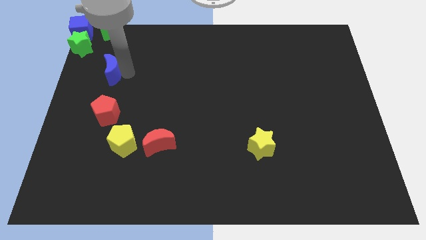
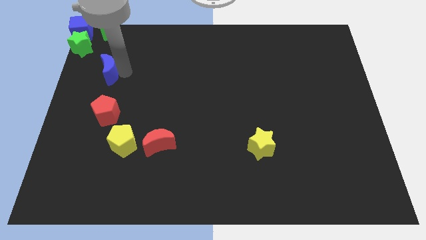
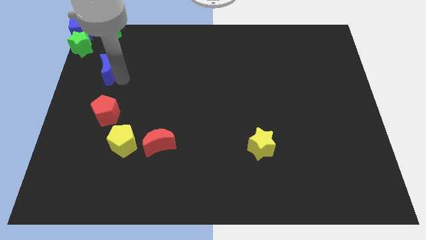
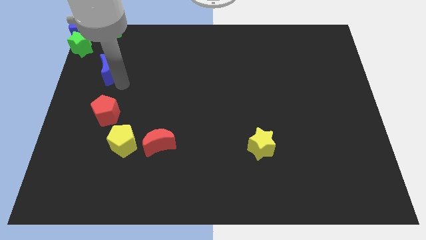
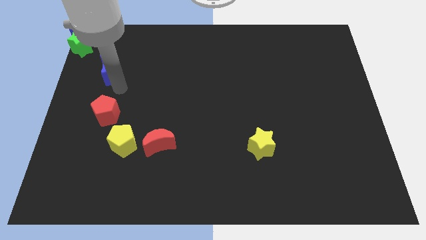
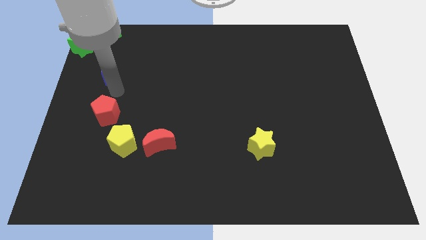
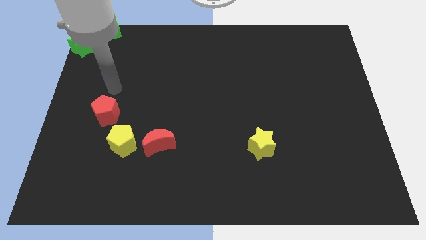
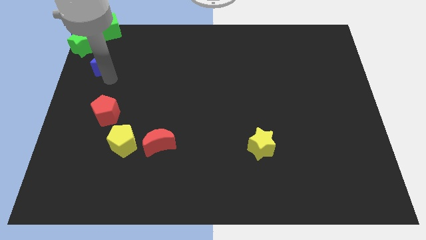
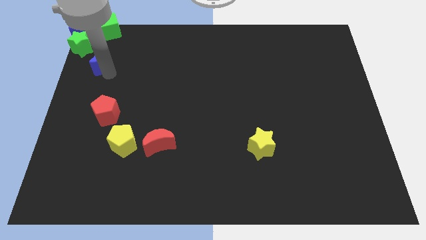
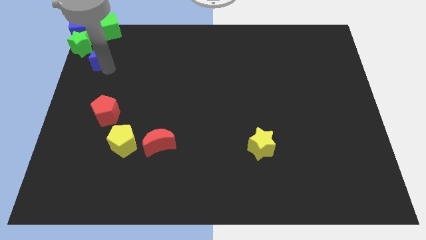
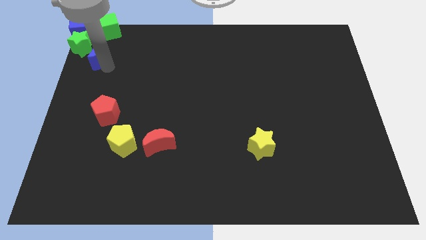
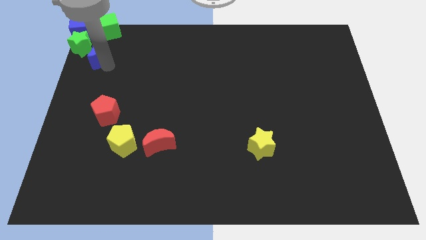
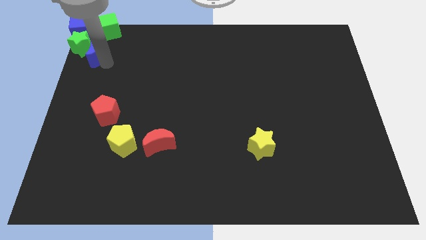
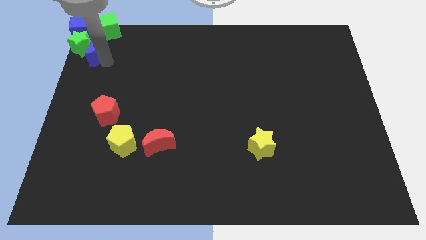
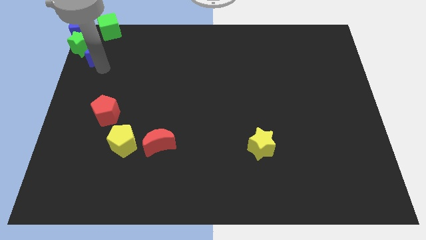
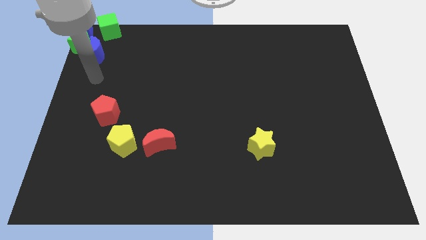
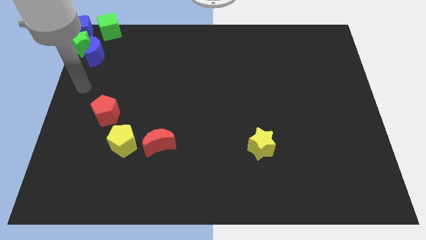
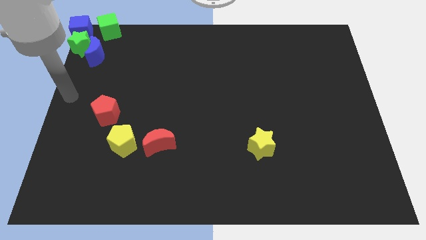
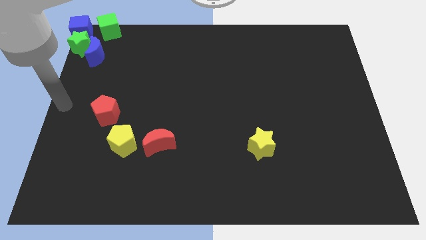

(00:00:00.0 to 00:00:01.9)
move the blue moon close to the green star

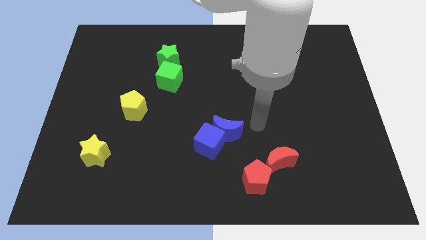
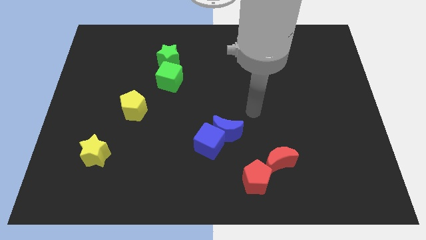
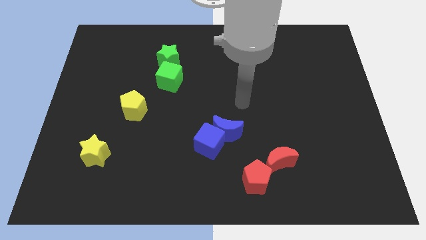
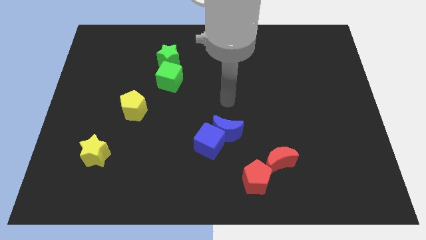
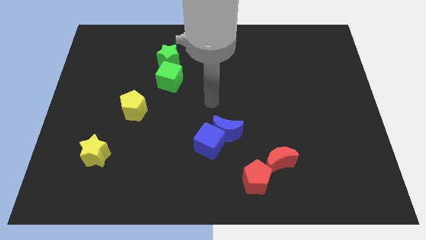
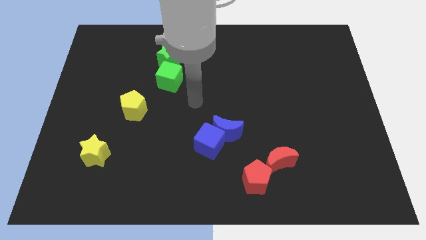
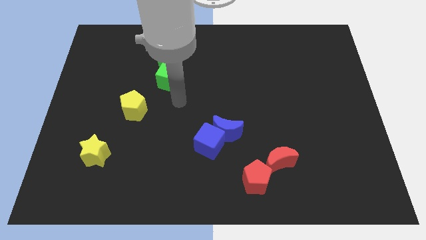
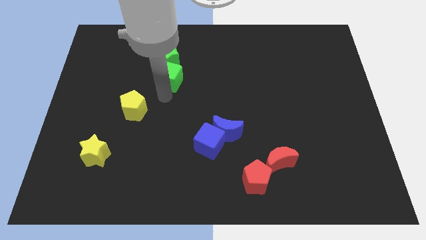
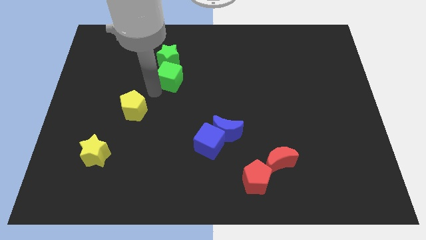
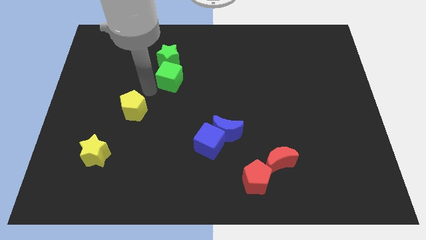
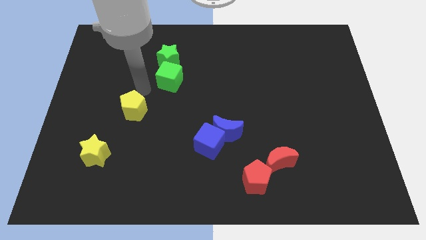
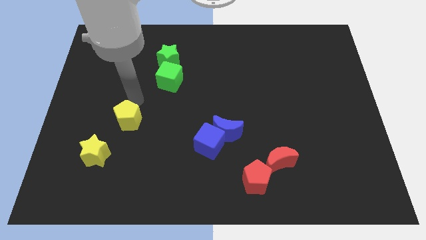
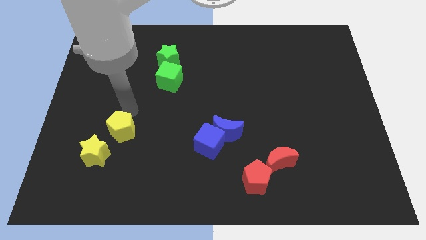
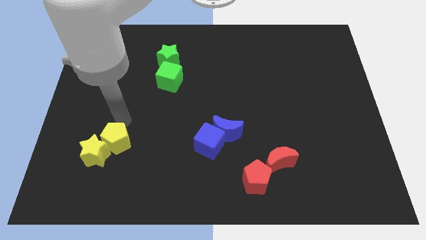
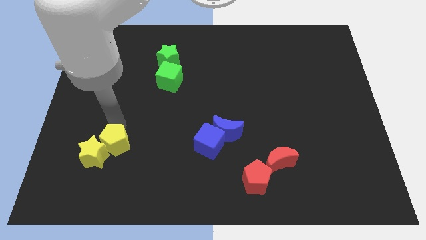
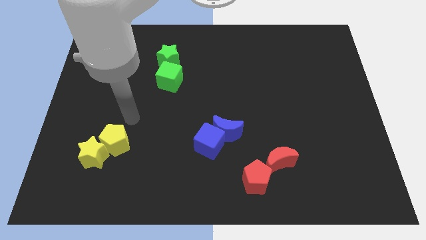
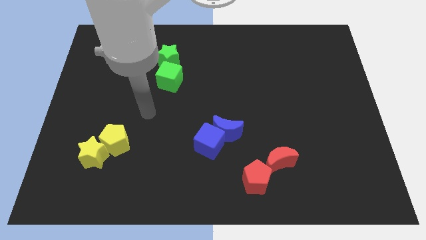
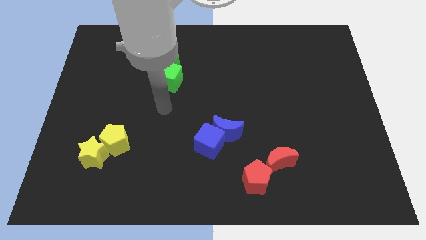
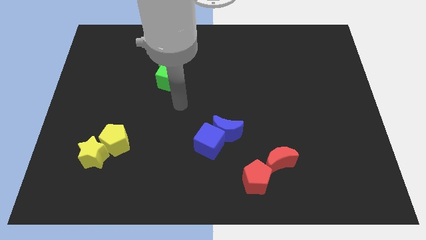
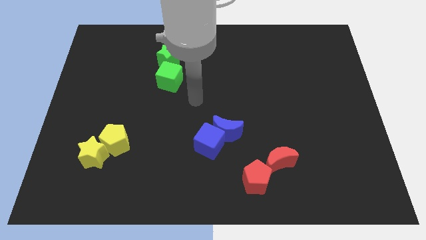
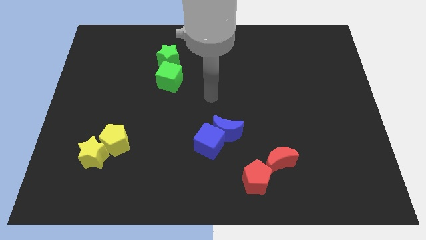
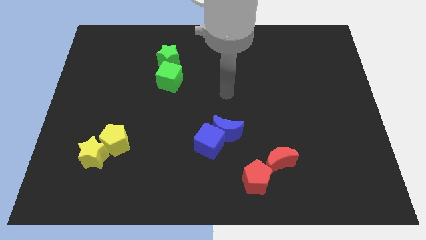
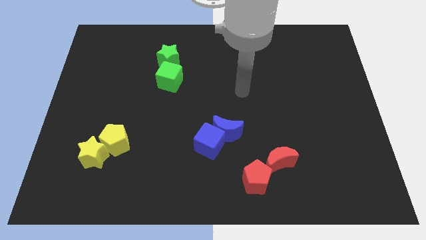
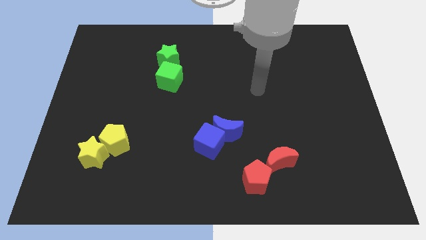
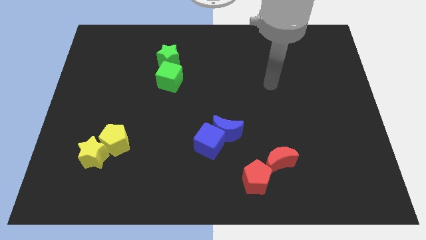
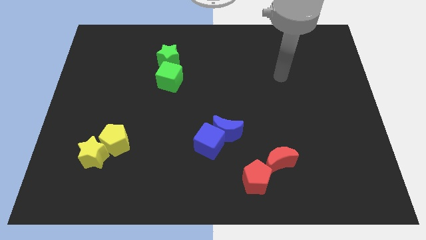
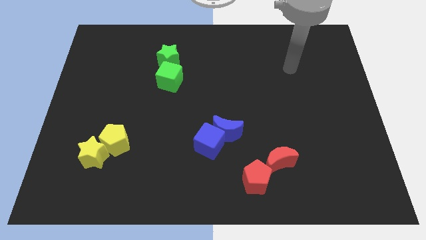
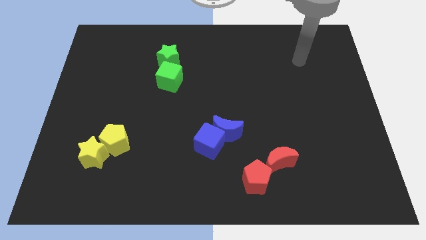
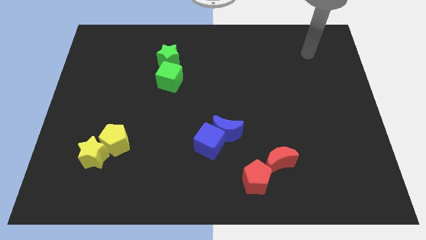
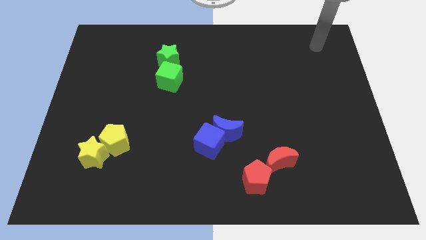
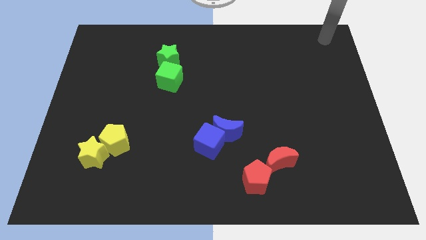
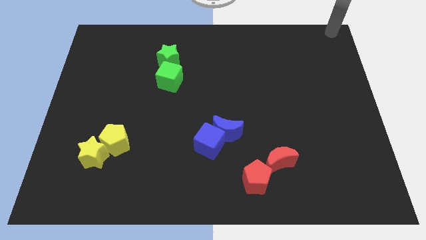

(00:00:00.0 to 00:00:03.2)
push the yellow pentagon into the yellow star

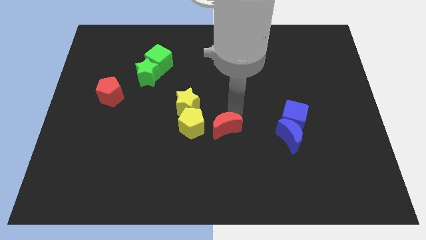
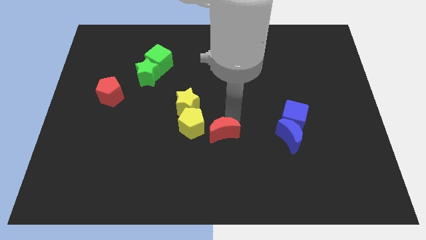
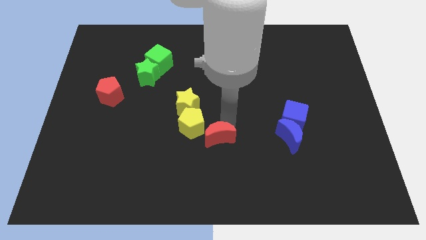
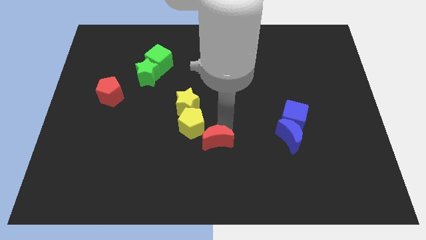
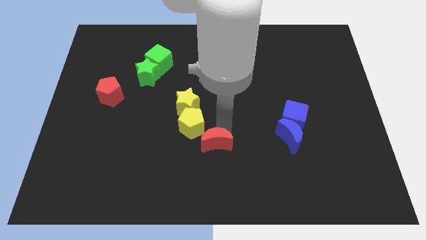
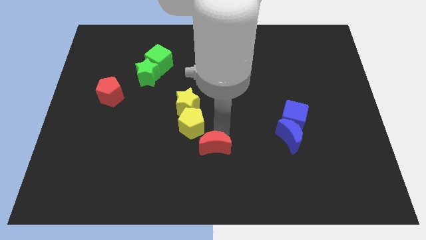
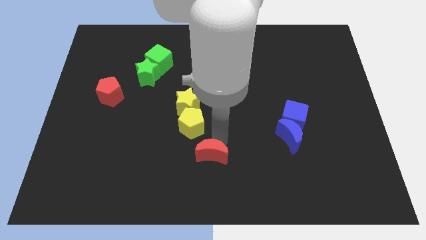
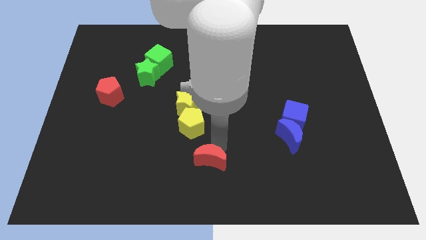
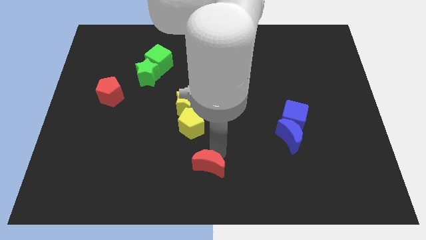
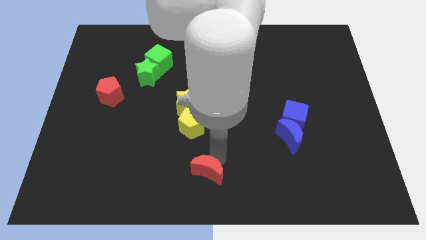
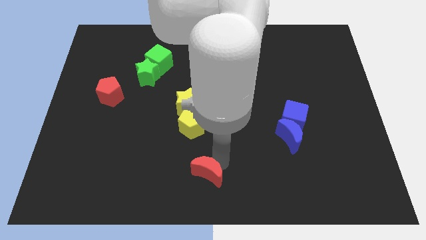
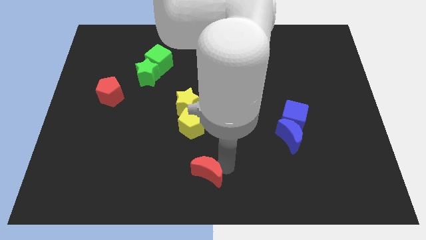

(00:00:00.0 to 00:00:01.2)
push the red crescent to the bottom of the yellow pentagon

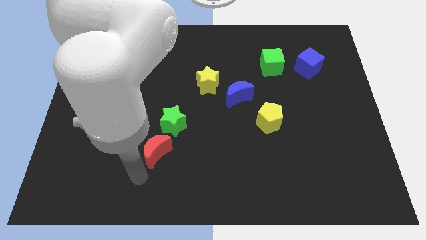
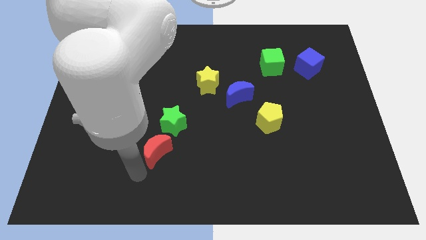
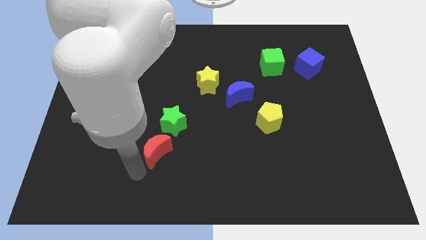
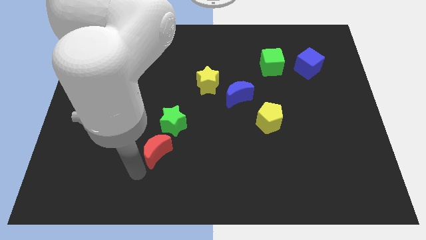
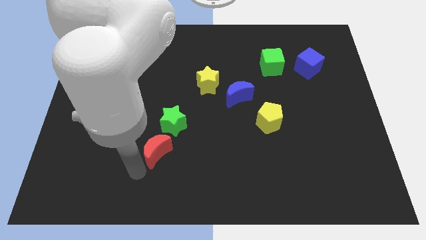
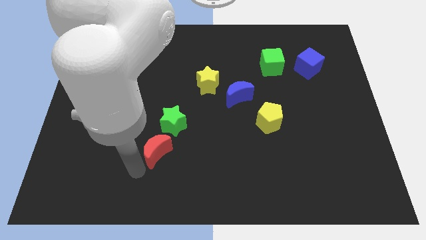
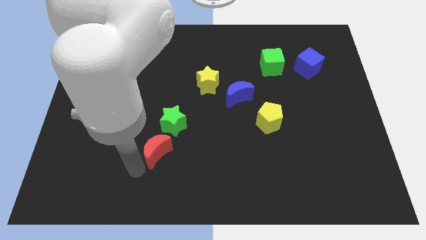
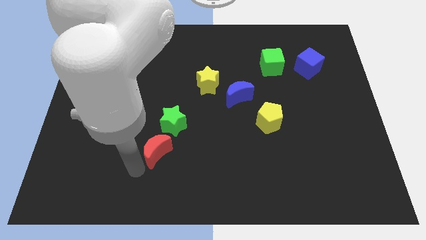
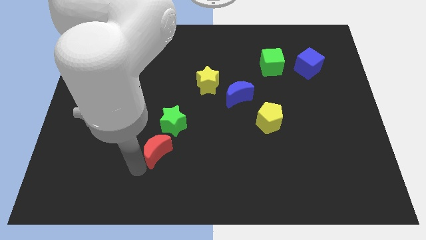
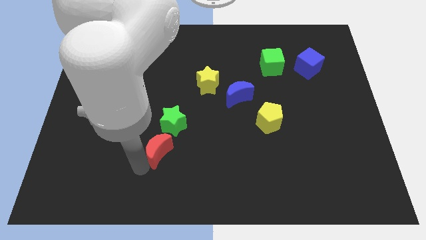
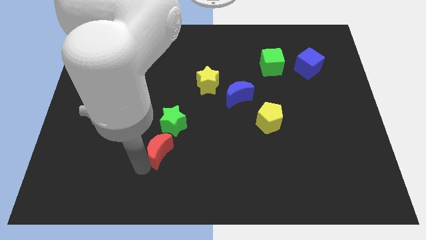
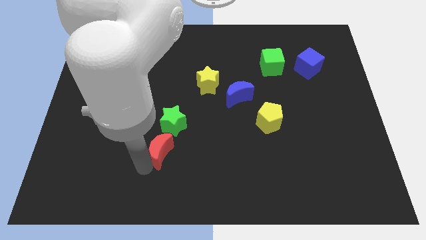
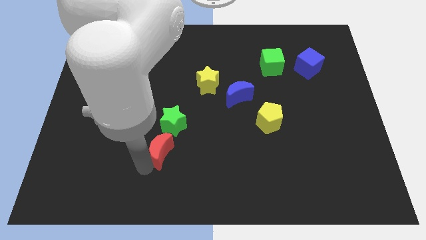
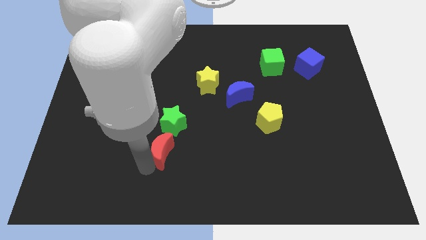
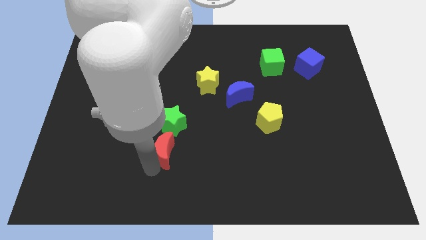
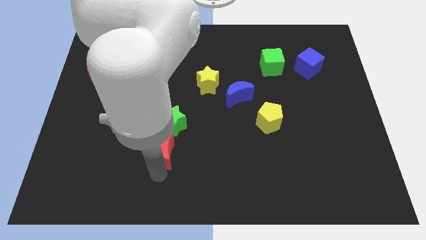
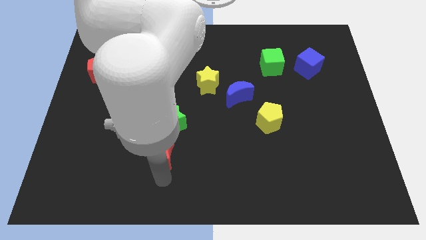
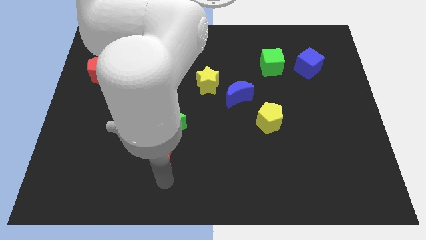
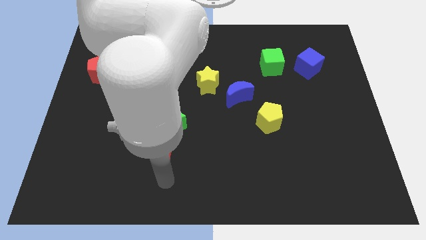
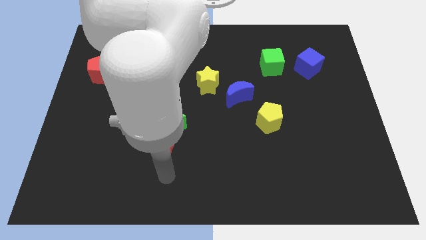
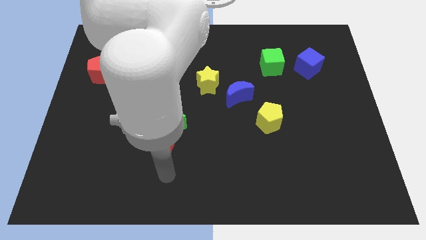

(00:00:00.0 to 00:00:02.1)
place the red crescent below the green star

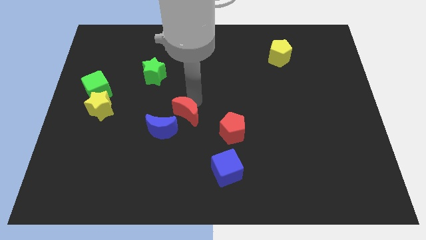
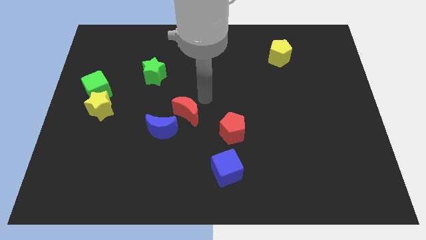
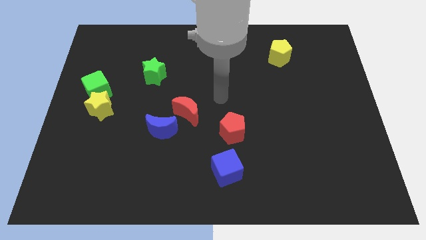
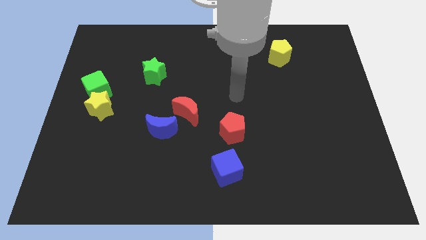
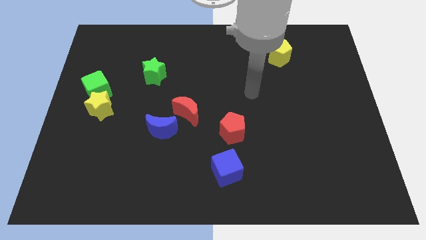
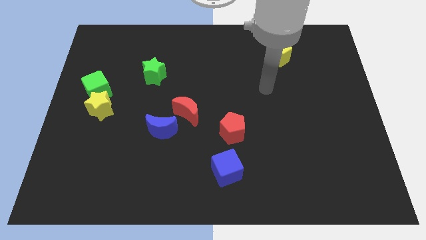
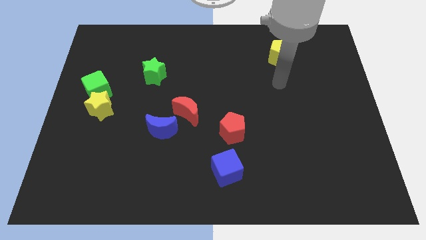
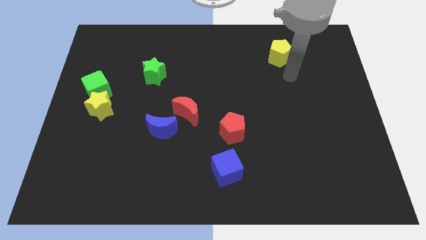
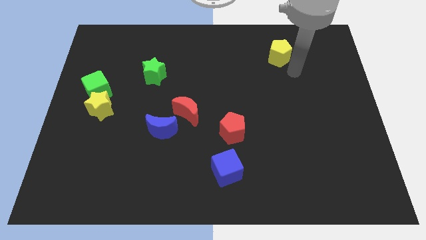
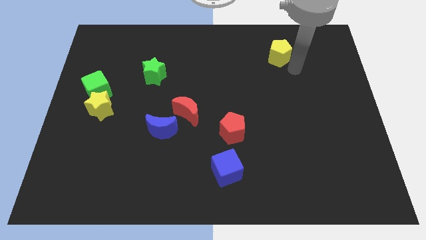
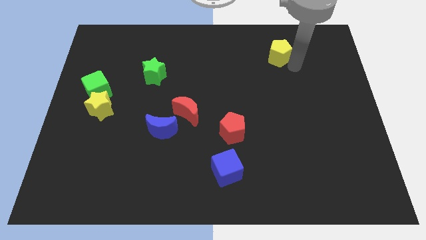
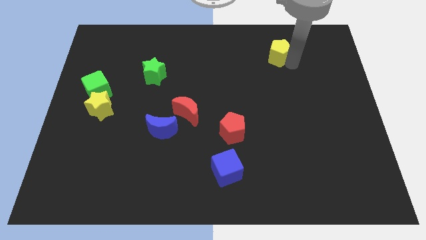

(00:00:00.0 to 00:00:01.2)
put your hand to the right of the yellow pentagon
